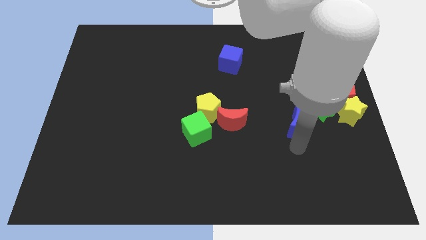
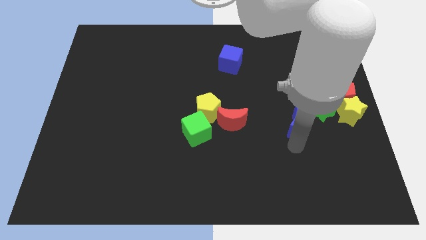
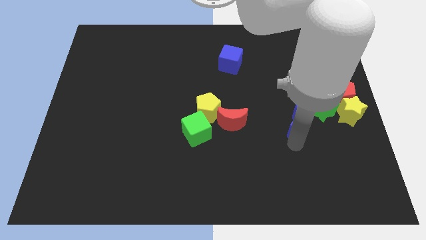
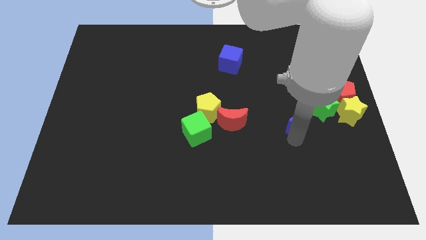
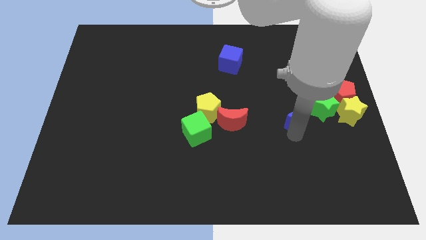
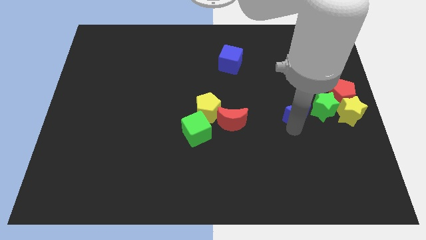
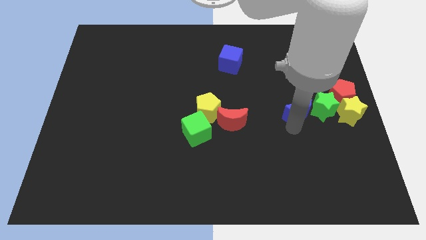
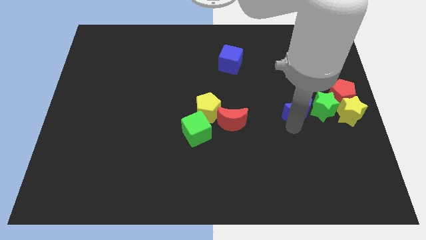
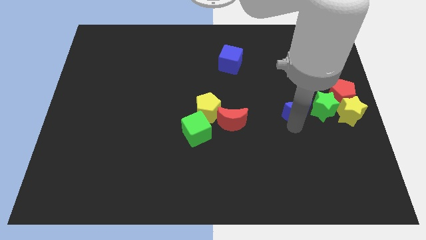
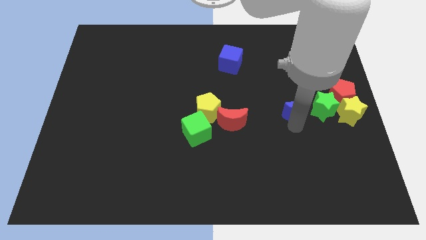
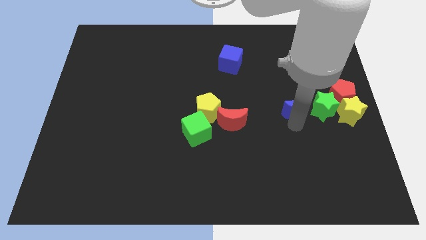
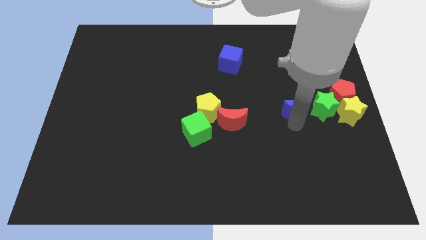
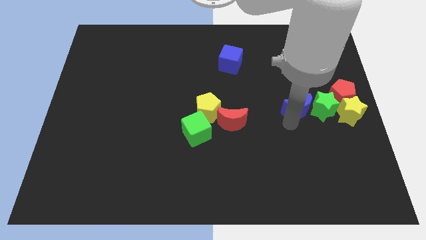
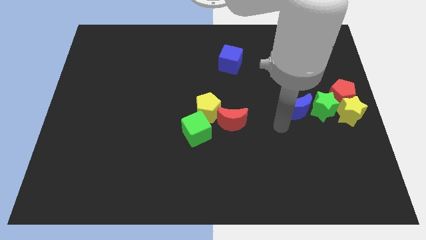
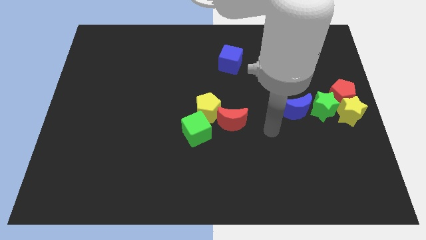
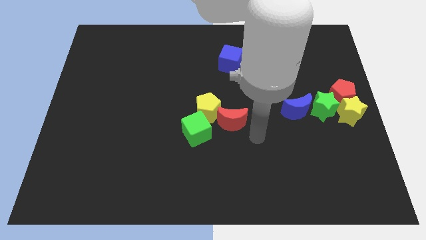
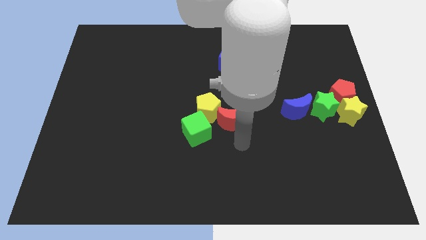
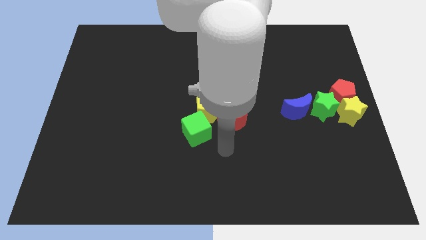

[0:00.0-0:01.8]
slide the blue crescent slightly upwards

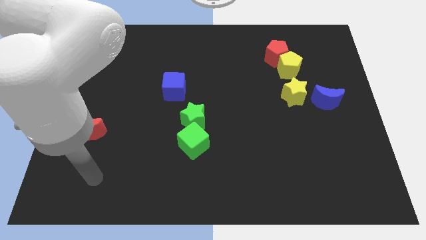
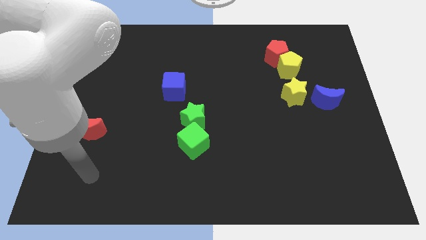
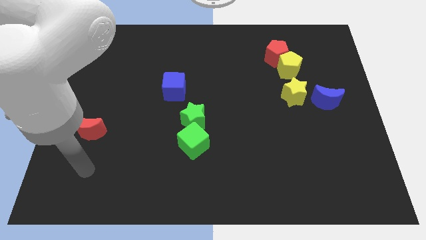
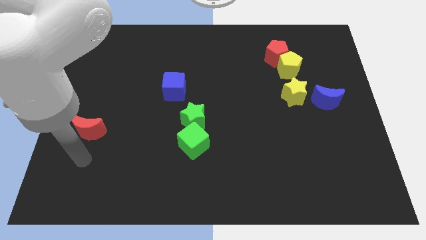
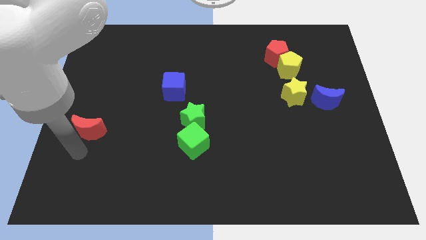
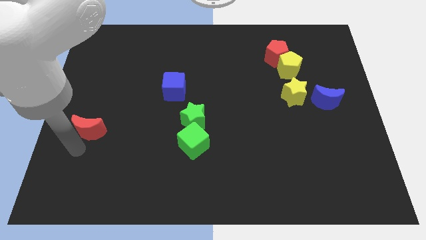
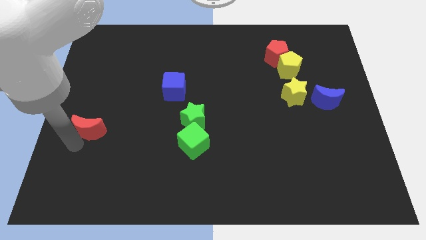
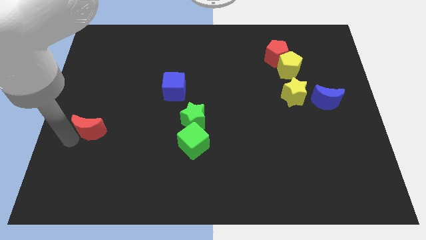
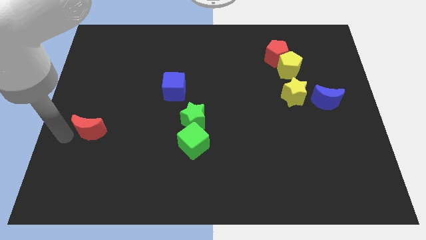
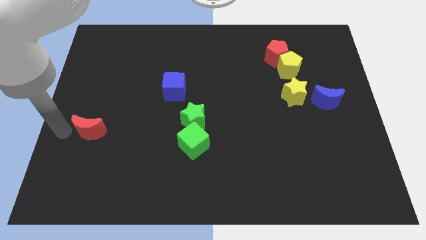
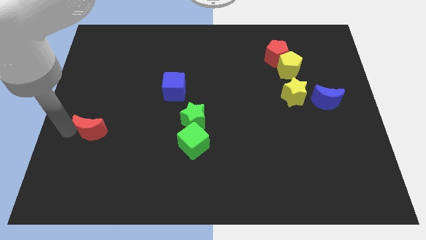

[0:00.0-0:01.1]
point your arm to the left side of red moon

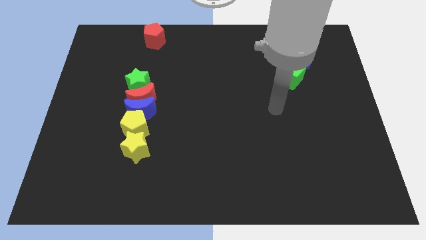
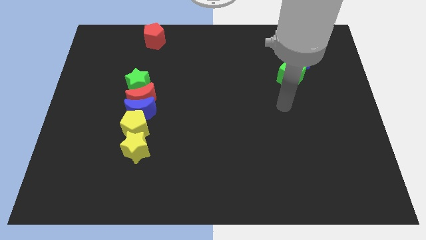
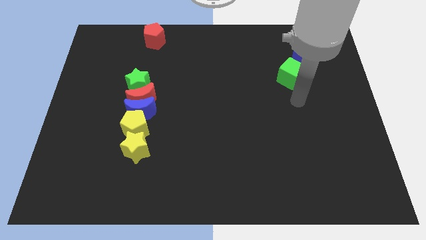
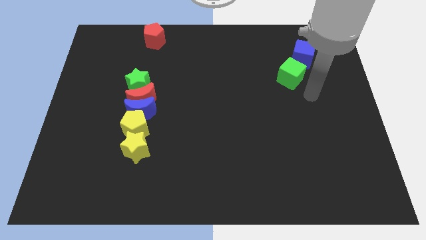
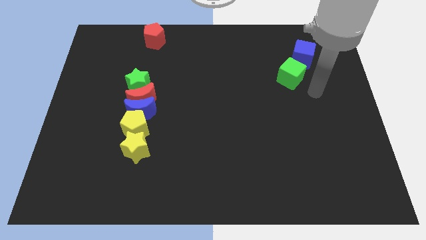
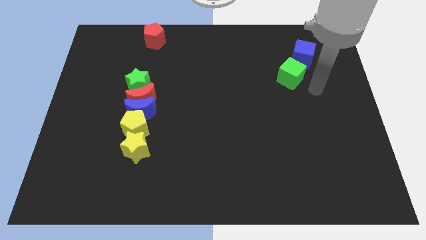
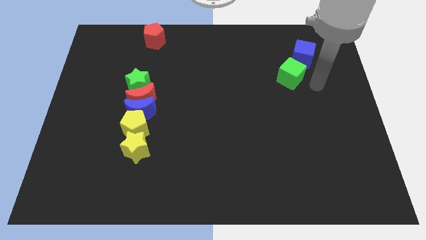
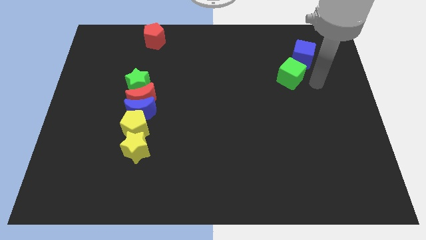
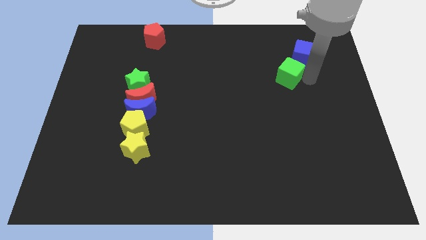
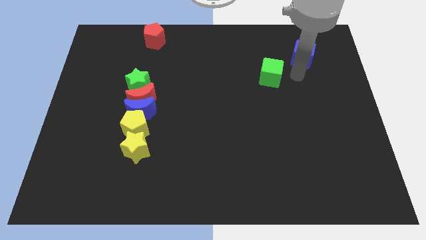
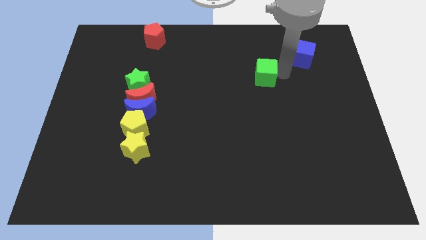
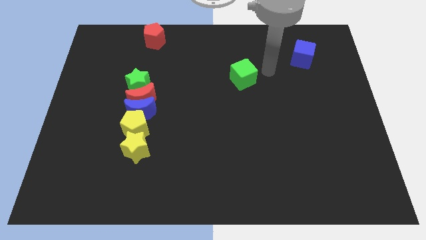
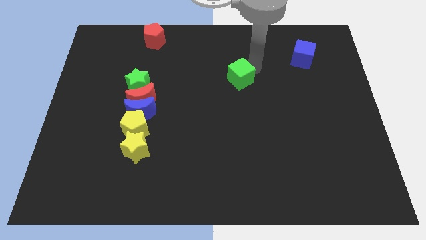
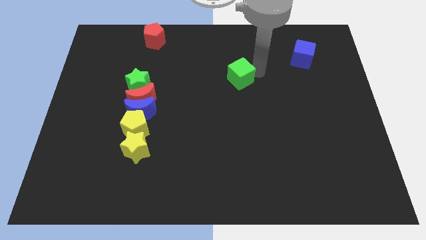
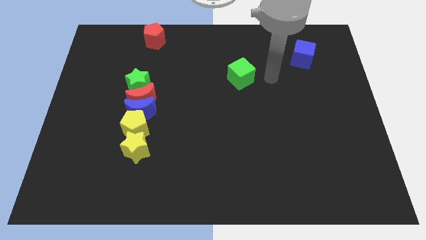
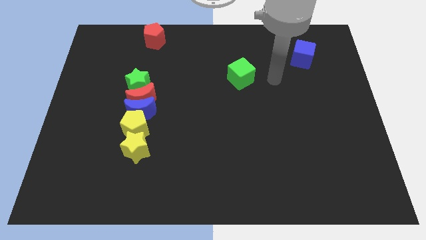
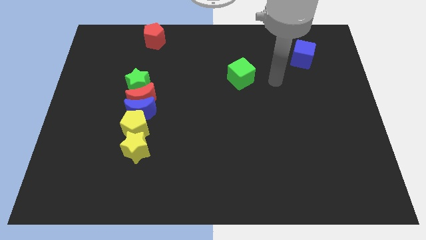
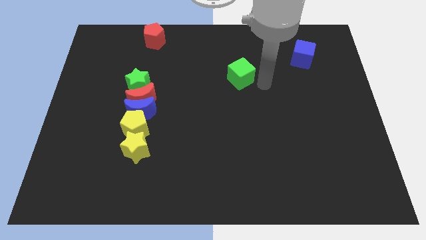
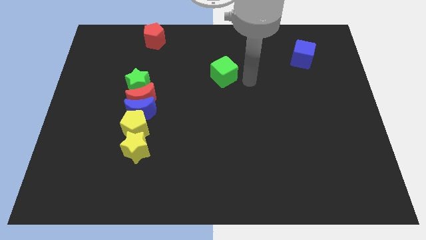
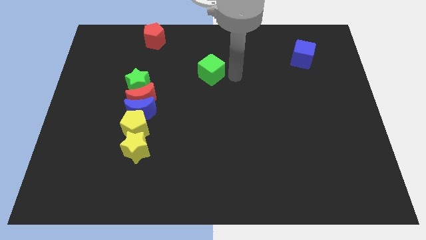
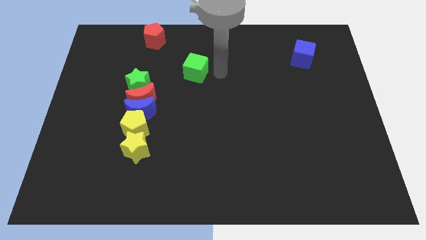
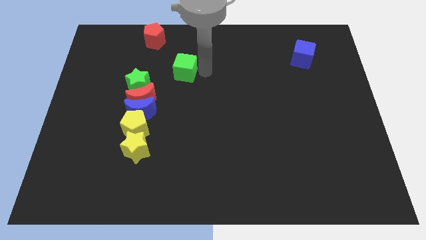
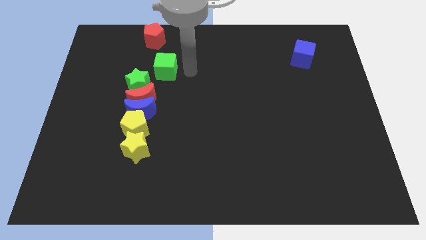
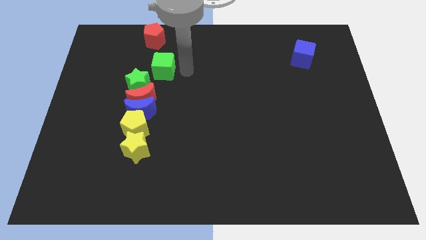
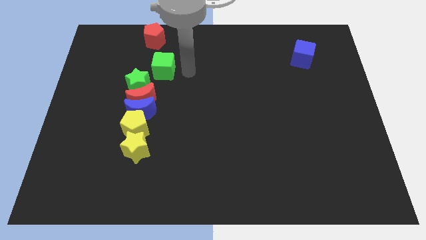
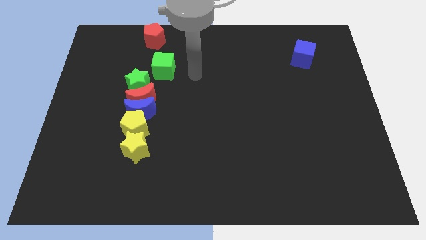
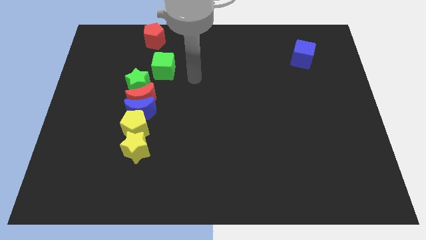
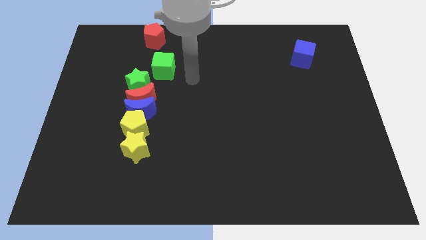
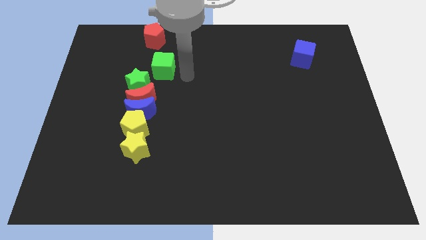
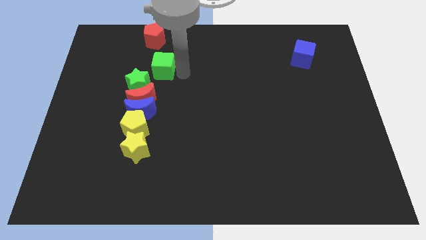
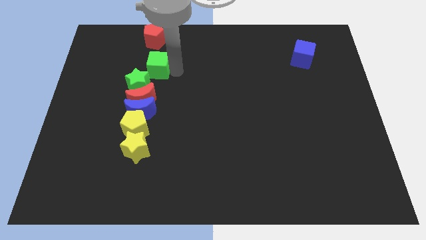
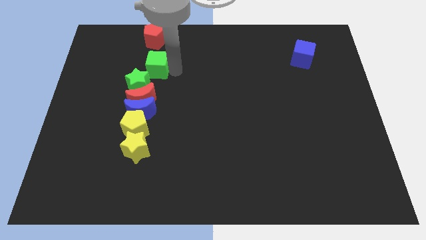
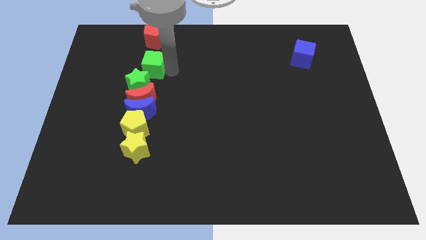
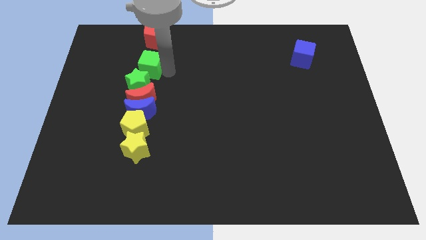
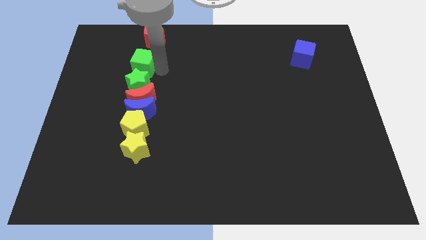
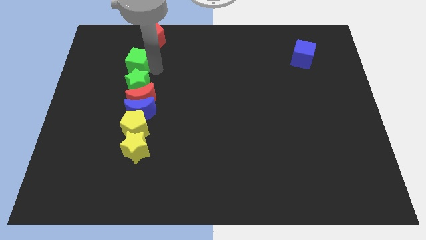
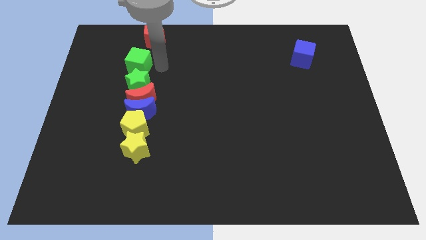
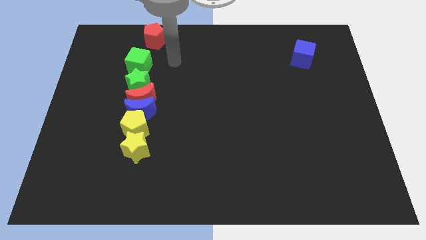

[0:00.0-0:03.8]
place the green cube on the top of green star

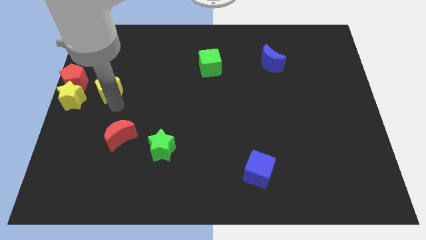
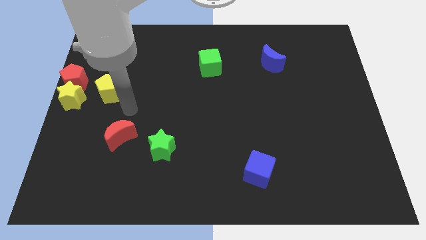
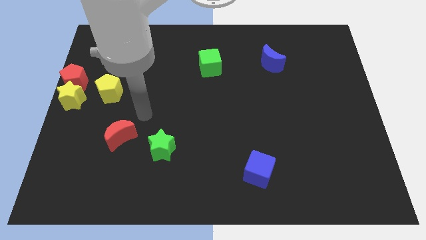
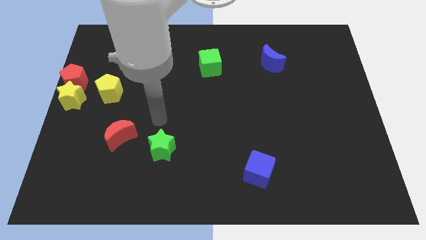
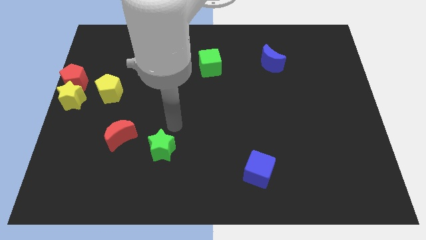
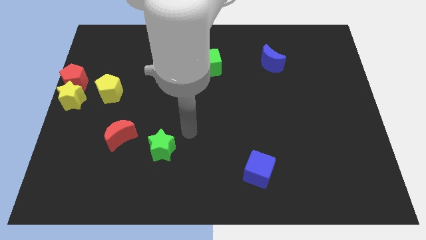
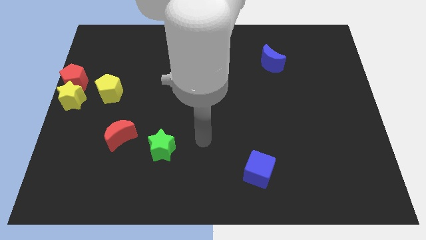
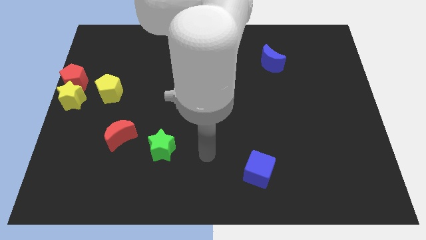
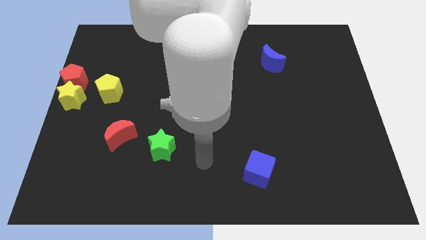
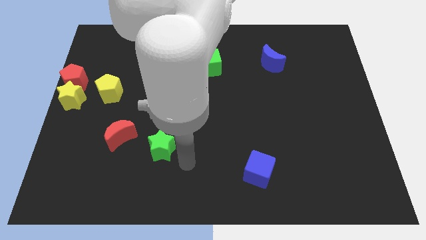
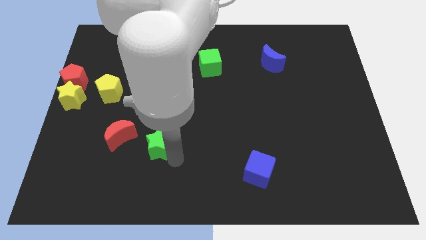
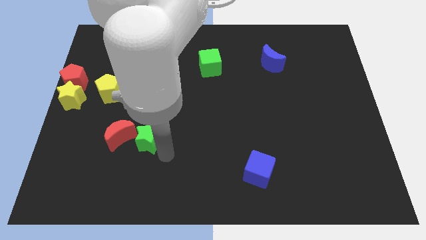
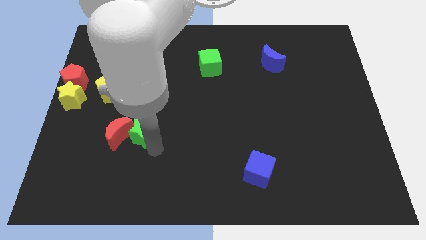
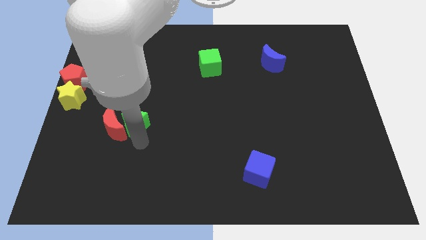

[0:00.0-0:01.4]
push the green star into the red moon

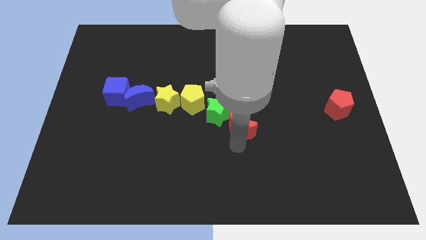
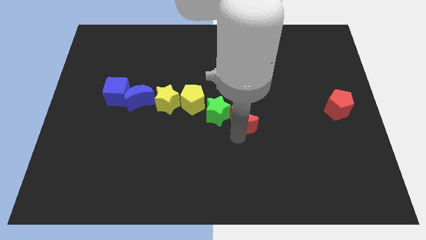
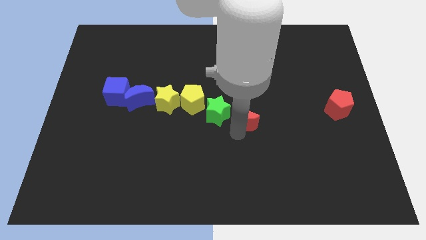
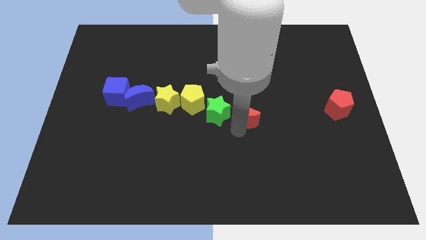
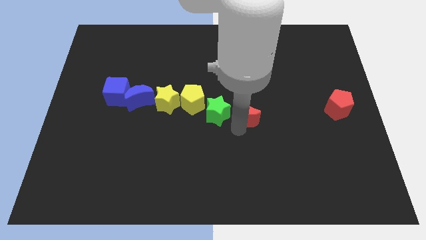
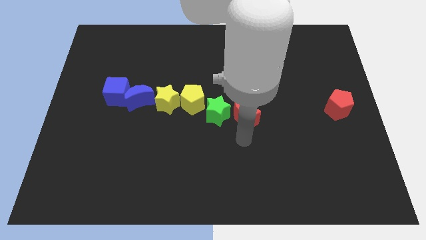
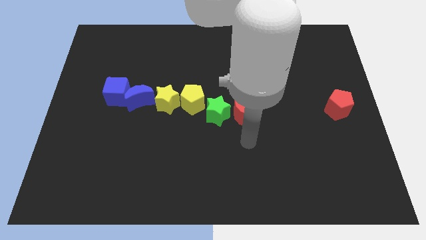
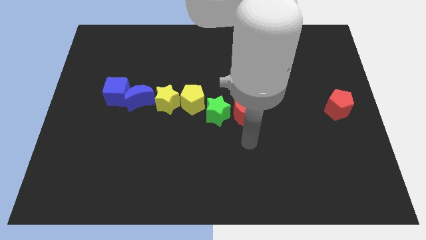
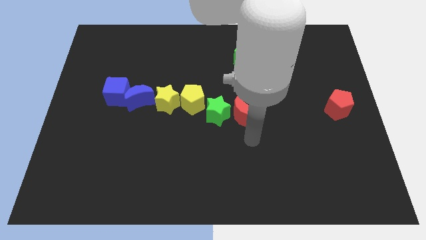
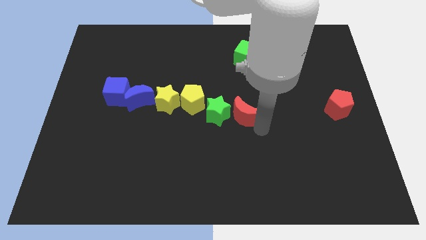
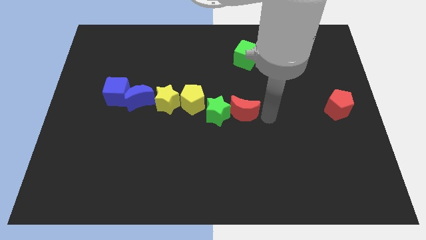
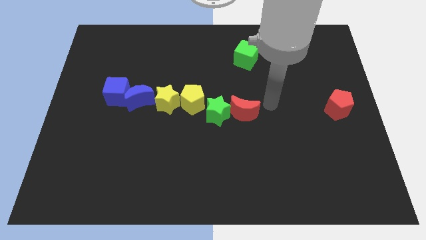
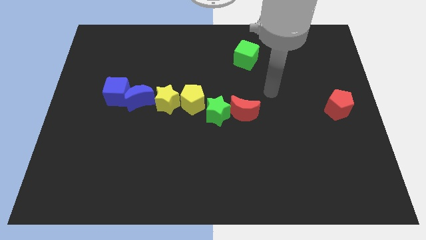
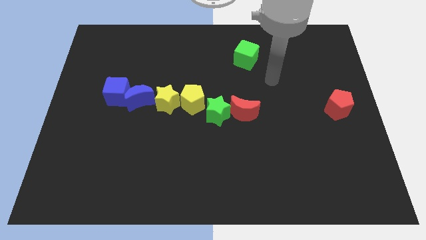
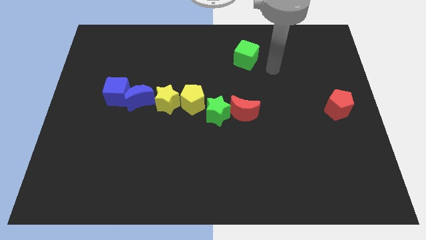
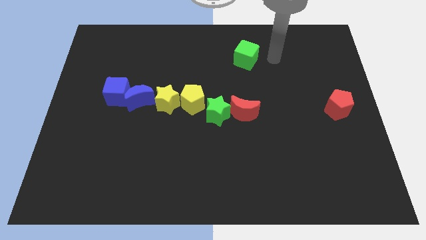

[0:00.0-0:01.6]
place the red crescent right of green star
